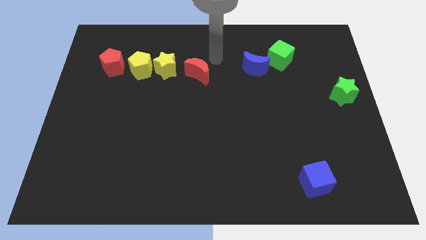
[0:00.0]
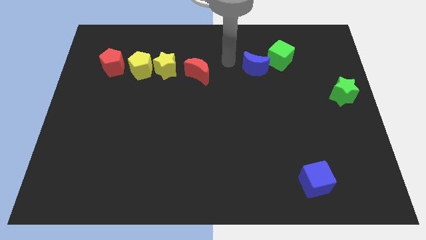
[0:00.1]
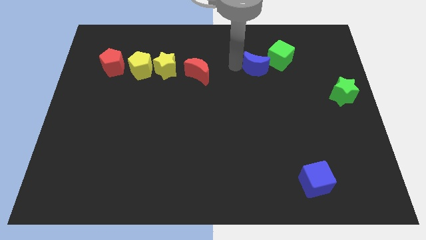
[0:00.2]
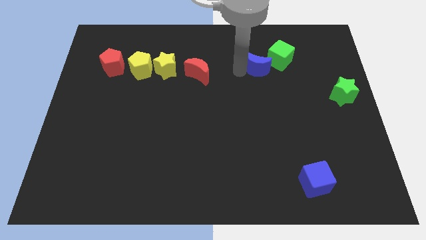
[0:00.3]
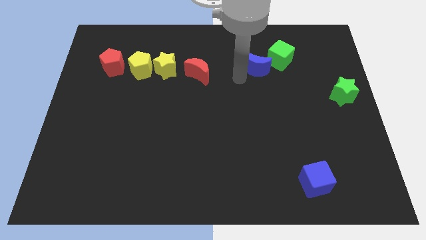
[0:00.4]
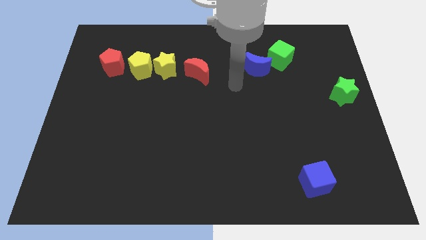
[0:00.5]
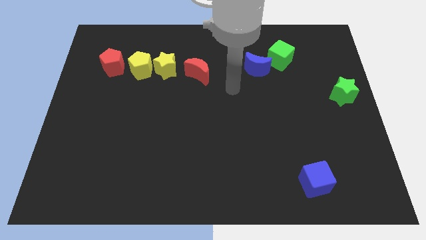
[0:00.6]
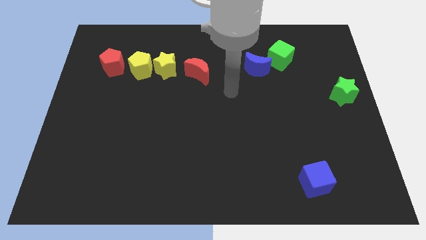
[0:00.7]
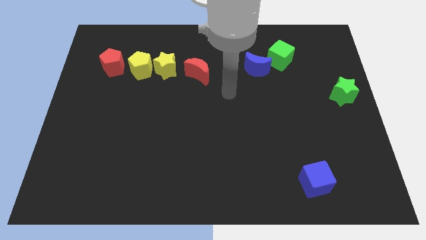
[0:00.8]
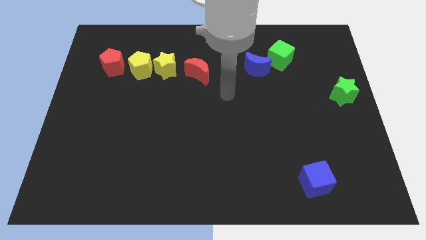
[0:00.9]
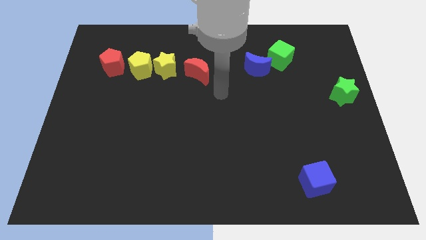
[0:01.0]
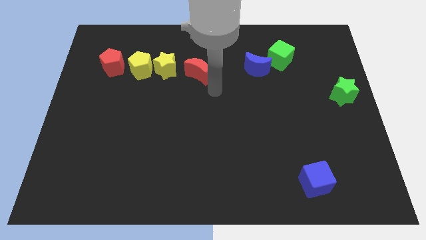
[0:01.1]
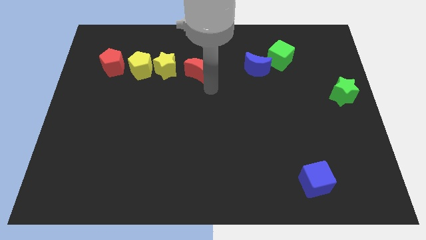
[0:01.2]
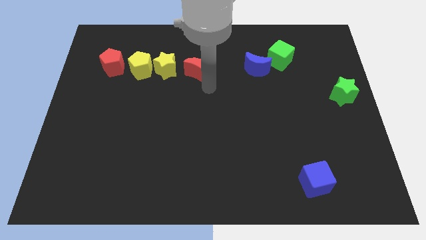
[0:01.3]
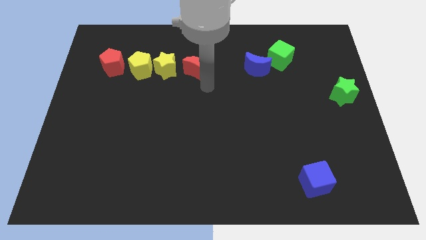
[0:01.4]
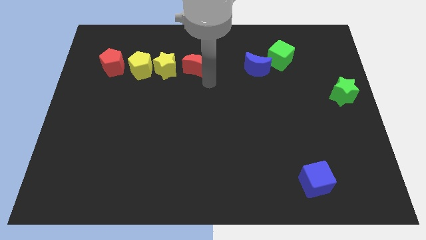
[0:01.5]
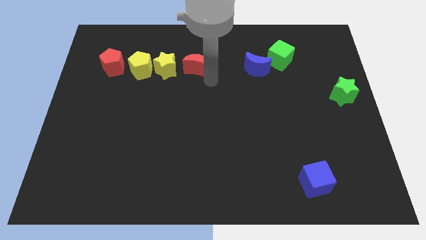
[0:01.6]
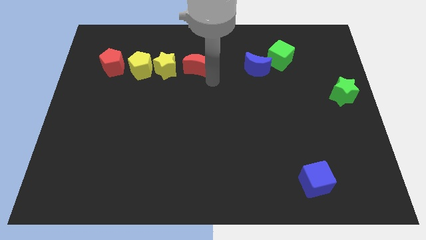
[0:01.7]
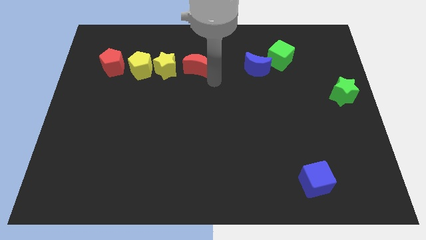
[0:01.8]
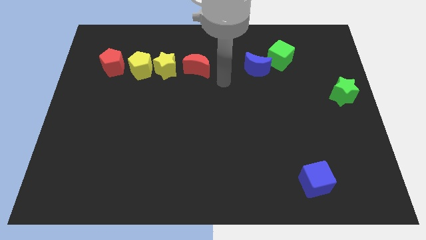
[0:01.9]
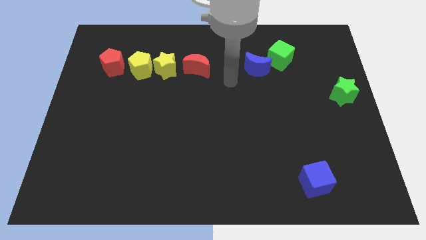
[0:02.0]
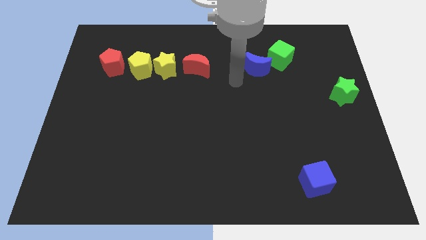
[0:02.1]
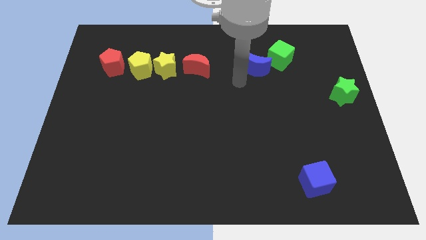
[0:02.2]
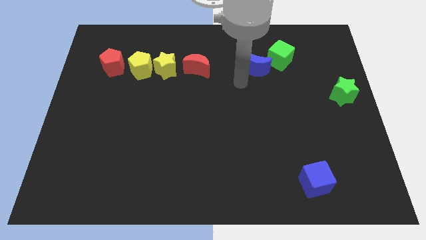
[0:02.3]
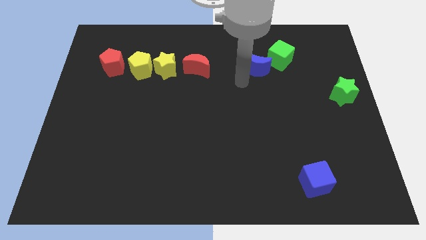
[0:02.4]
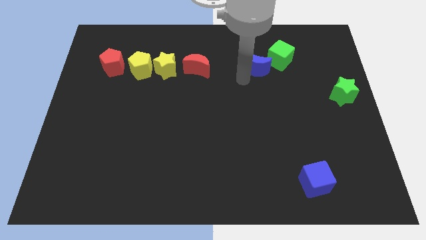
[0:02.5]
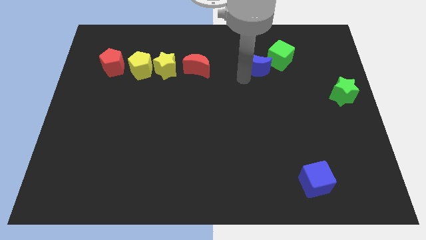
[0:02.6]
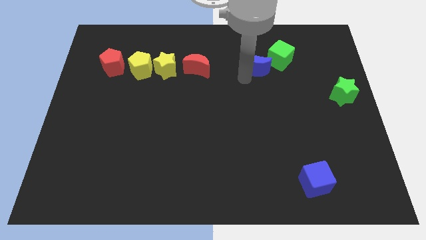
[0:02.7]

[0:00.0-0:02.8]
push the red moon up slightly

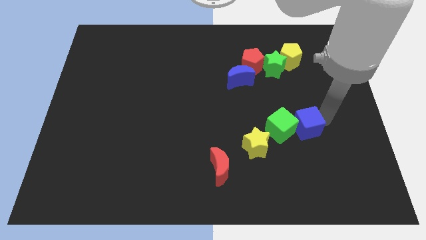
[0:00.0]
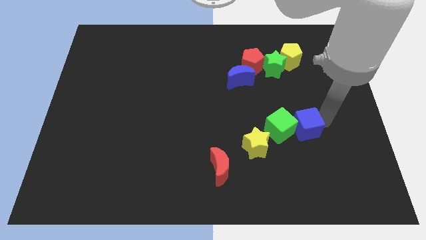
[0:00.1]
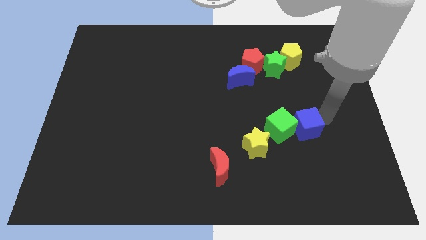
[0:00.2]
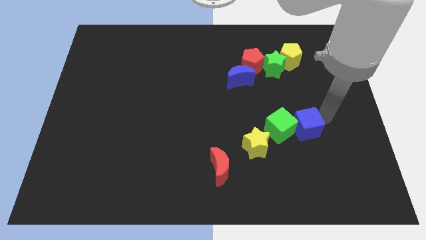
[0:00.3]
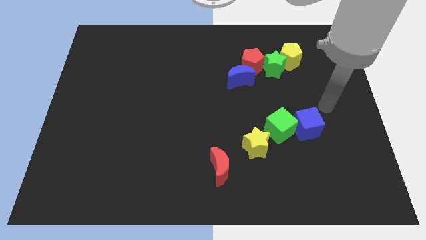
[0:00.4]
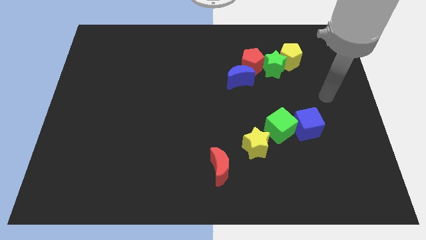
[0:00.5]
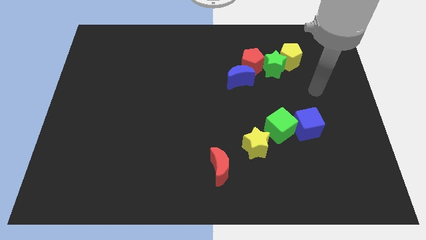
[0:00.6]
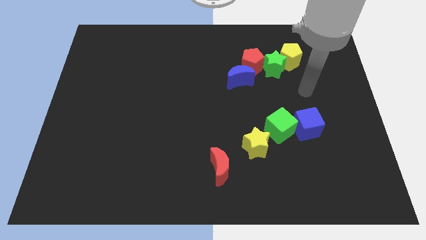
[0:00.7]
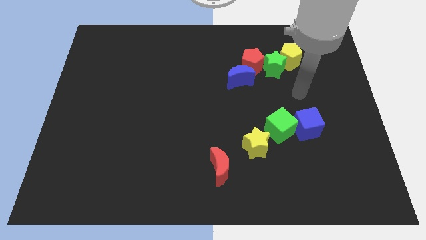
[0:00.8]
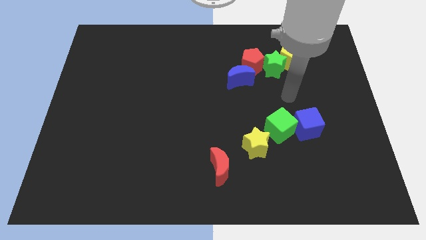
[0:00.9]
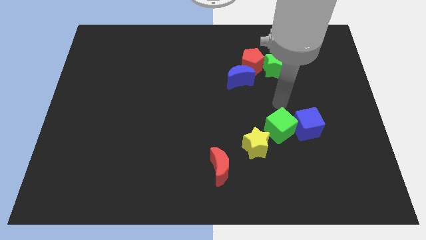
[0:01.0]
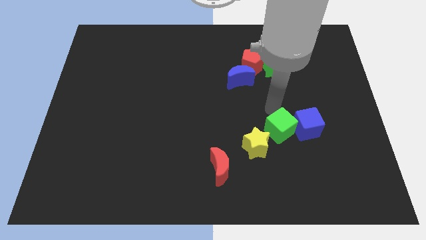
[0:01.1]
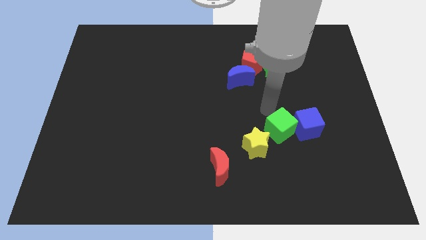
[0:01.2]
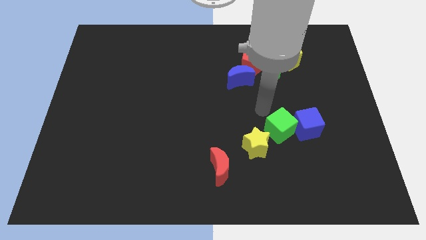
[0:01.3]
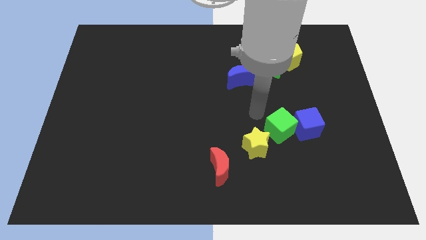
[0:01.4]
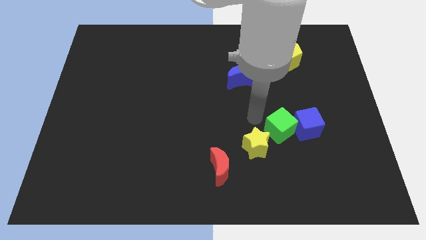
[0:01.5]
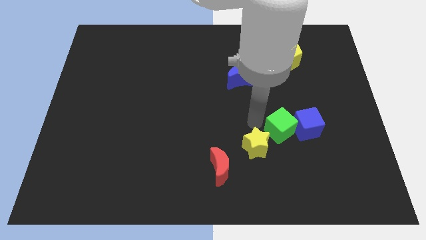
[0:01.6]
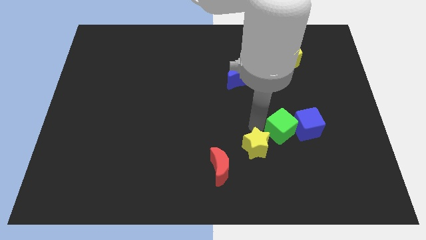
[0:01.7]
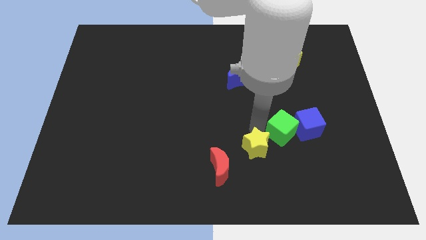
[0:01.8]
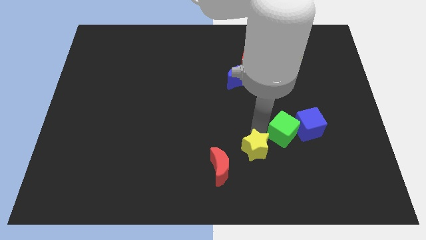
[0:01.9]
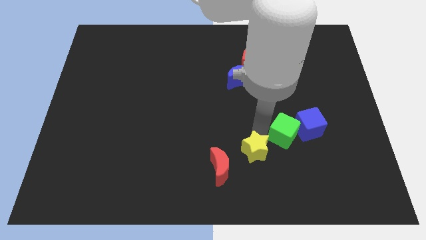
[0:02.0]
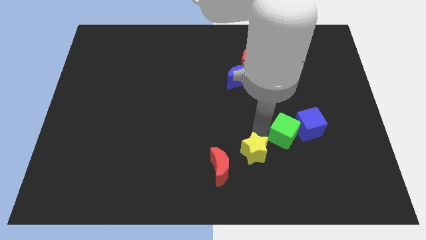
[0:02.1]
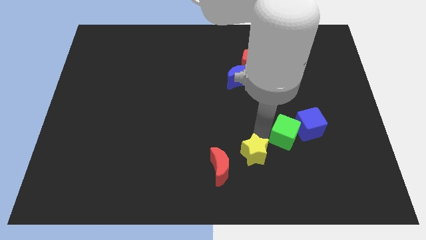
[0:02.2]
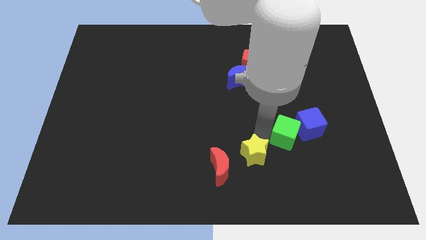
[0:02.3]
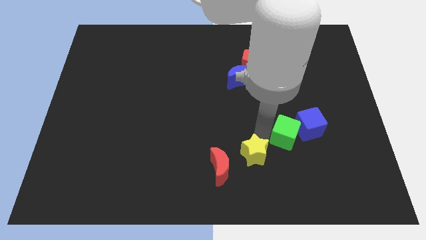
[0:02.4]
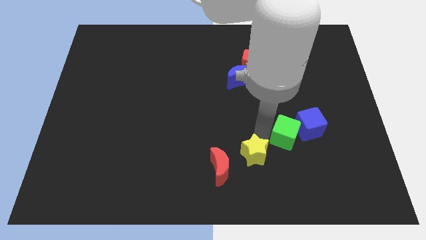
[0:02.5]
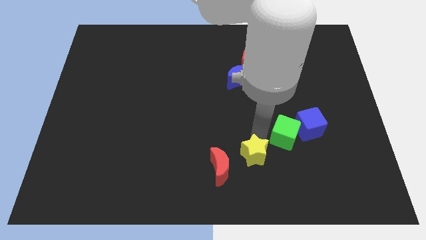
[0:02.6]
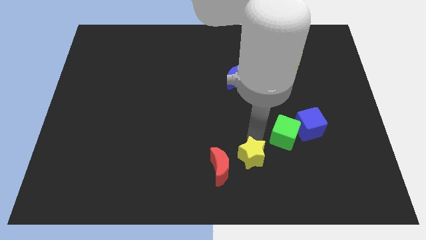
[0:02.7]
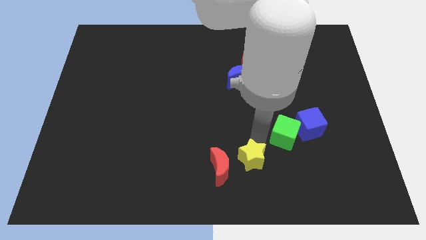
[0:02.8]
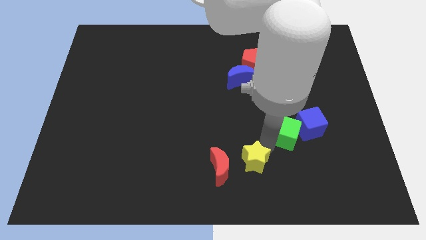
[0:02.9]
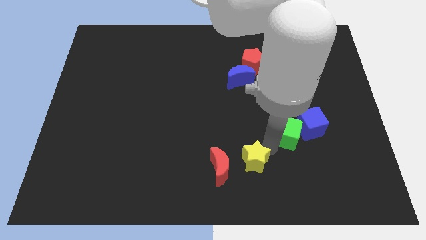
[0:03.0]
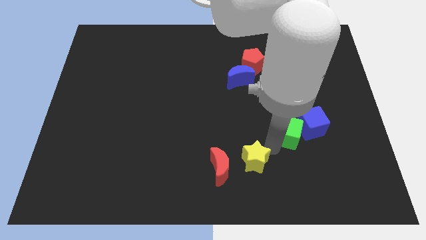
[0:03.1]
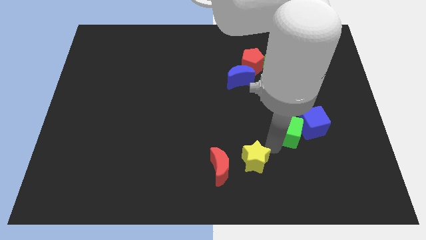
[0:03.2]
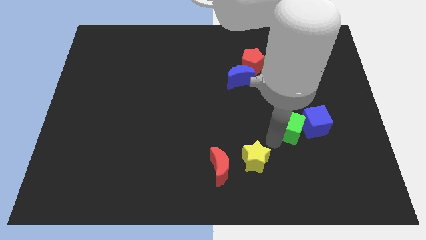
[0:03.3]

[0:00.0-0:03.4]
separate the yellow star and green cube

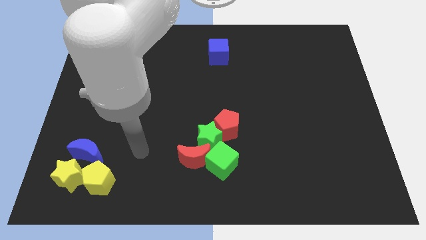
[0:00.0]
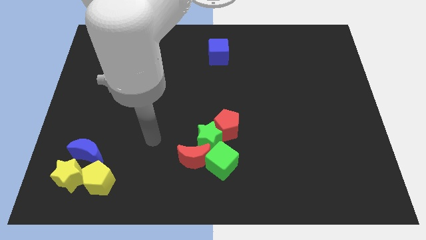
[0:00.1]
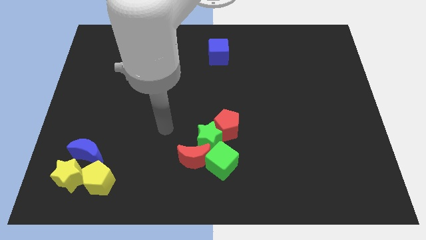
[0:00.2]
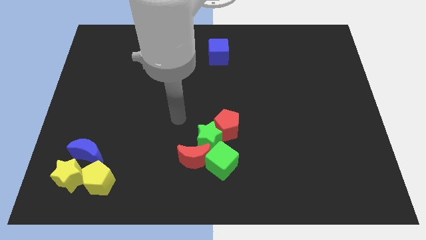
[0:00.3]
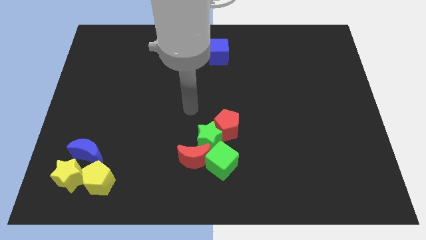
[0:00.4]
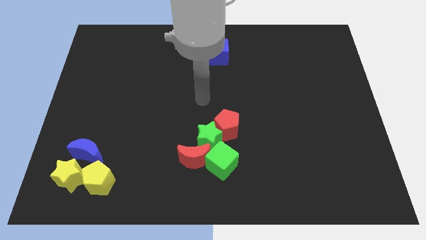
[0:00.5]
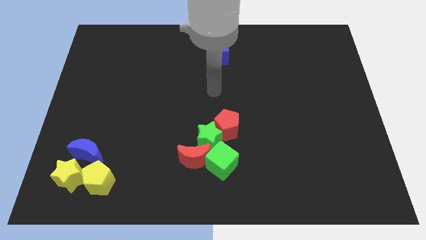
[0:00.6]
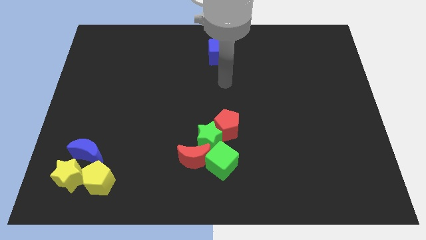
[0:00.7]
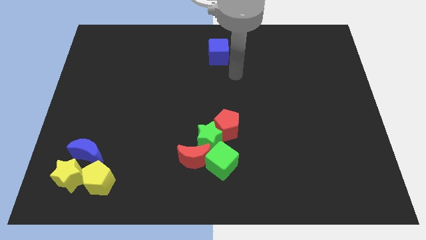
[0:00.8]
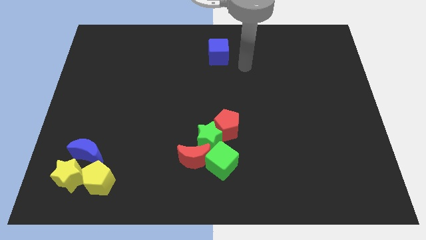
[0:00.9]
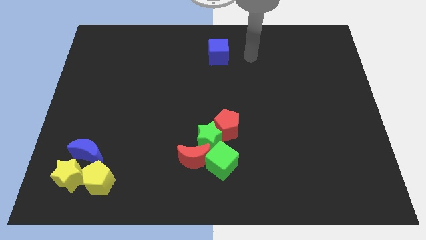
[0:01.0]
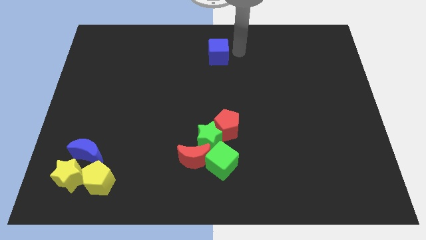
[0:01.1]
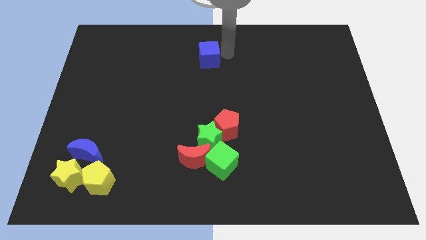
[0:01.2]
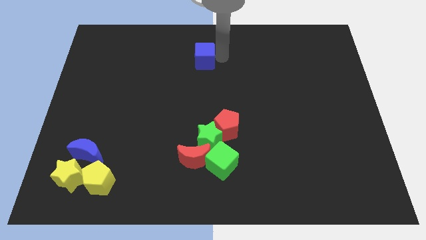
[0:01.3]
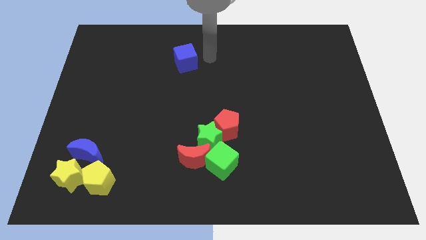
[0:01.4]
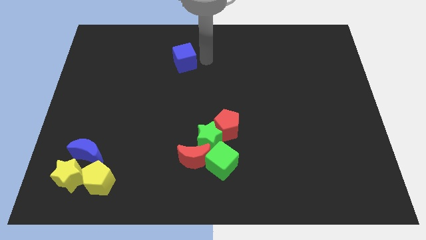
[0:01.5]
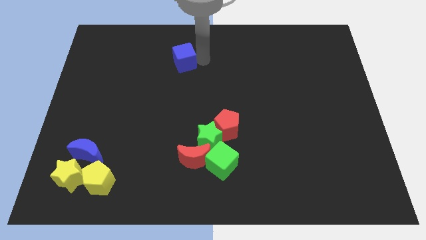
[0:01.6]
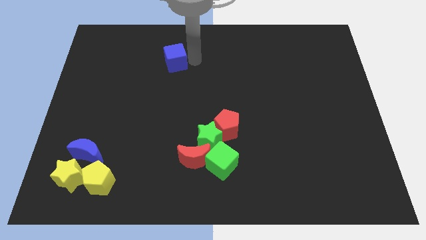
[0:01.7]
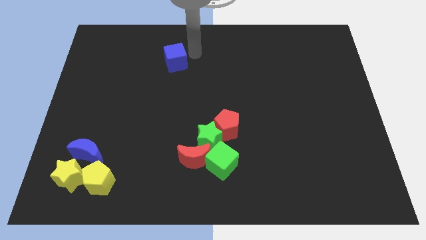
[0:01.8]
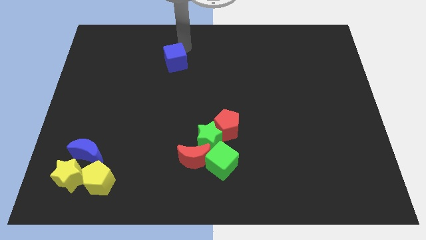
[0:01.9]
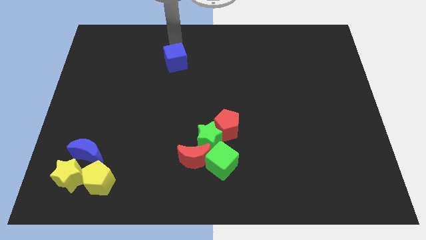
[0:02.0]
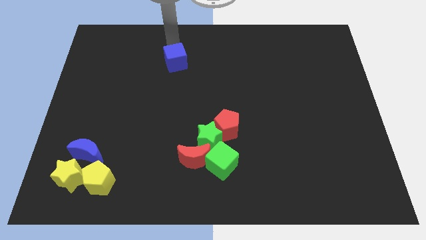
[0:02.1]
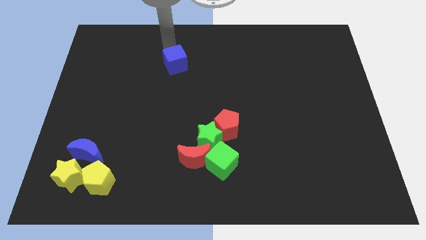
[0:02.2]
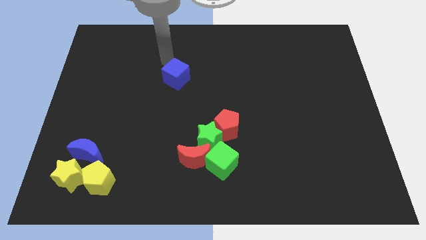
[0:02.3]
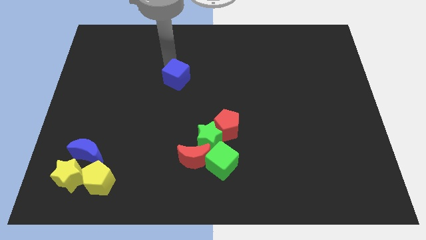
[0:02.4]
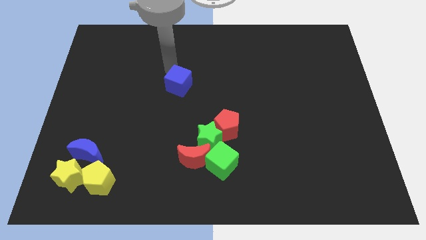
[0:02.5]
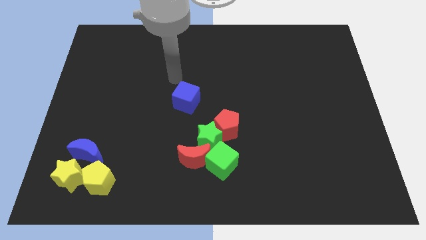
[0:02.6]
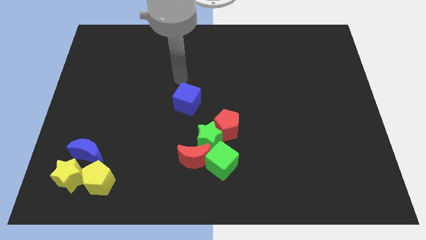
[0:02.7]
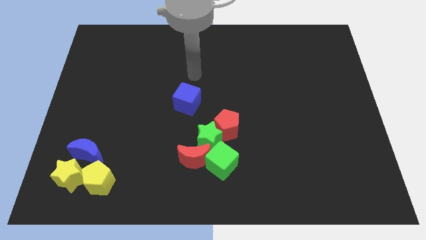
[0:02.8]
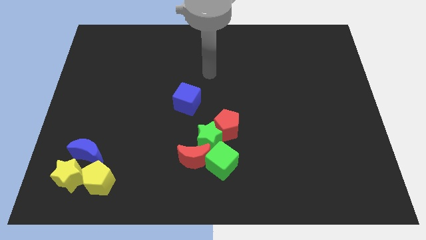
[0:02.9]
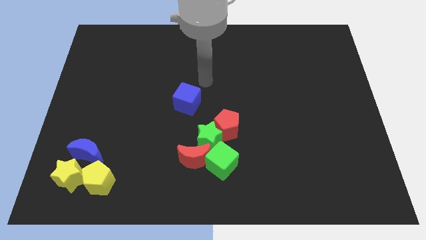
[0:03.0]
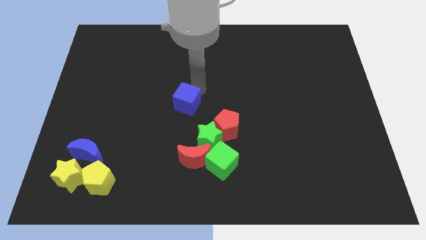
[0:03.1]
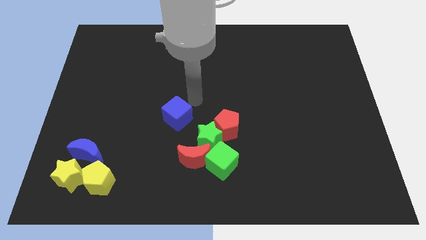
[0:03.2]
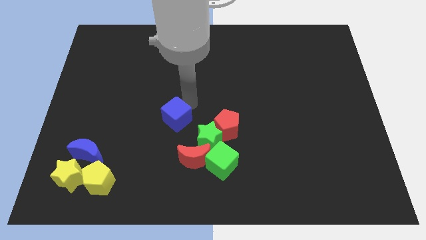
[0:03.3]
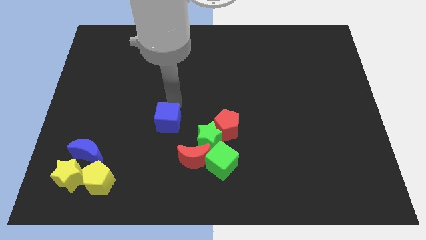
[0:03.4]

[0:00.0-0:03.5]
move blue cube left above the green star
